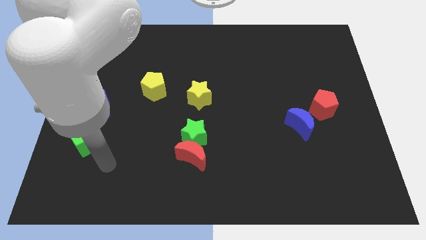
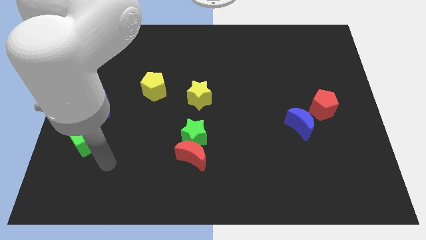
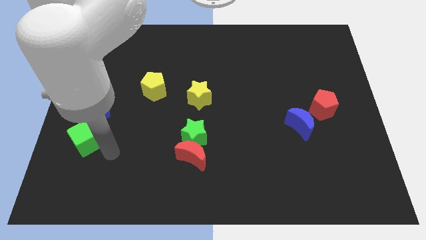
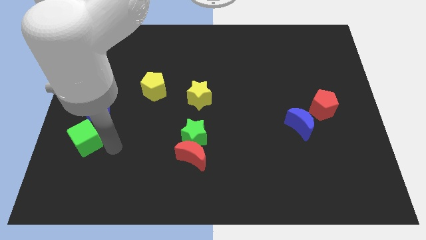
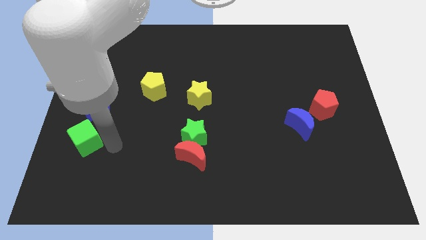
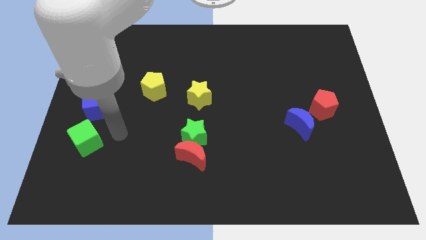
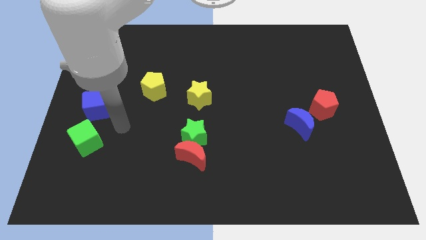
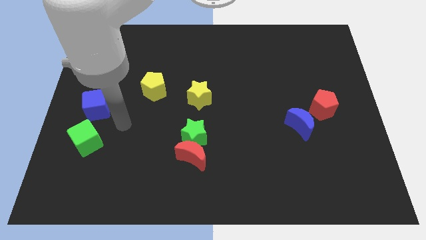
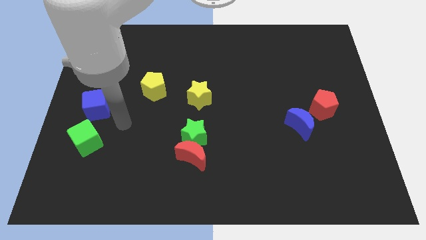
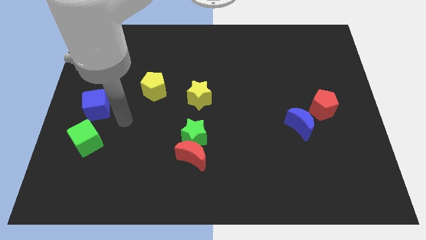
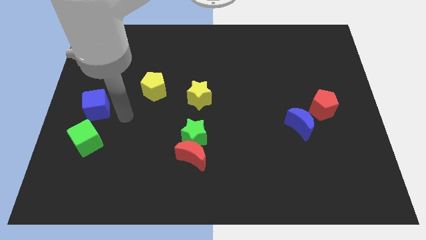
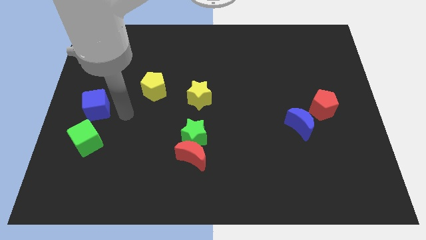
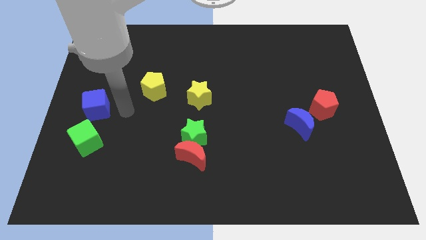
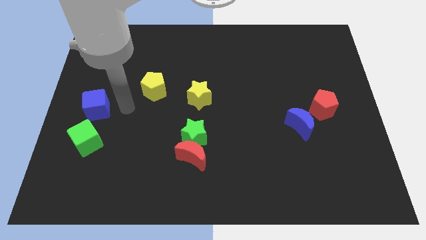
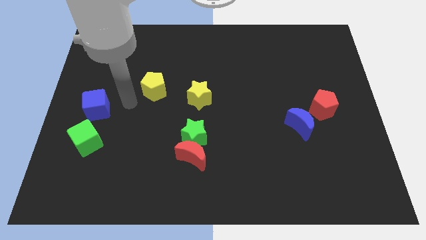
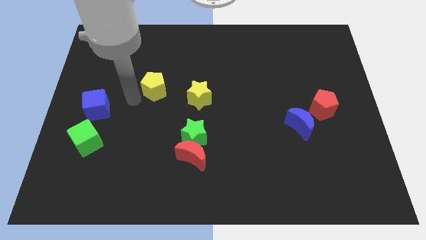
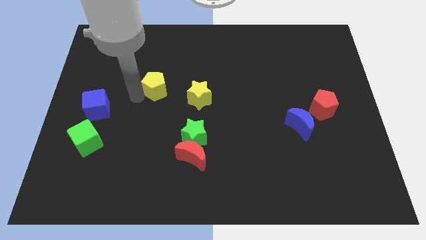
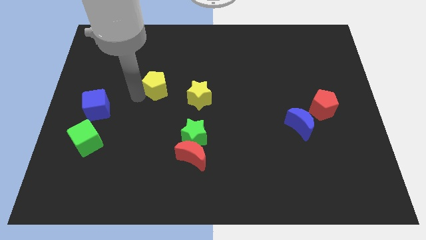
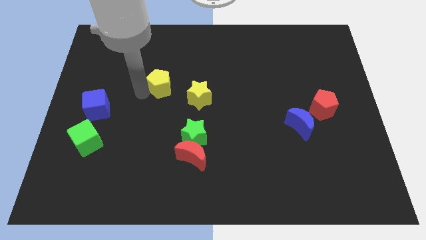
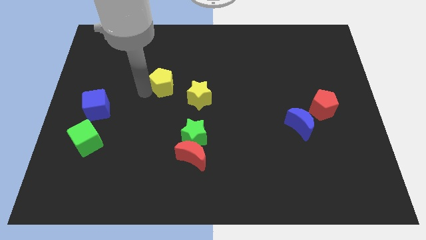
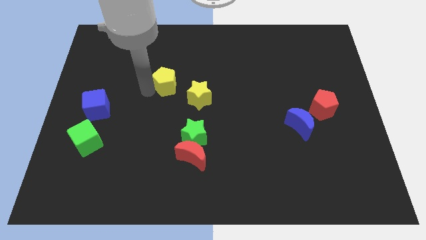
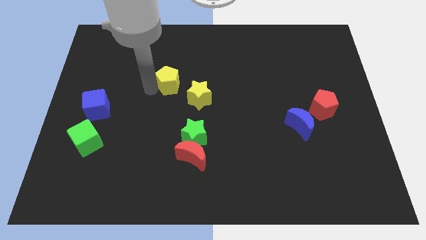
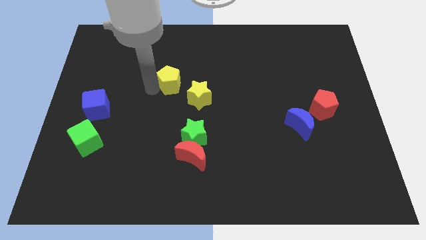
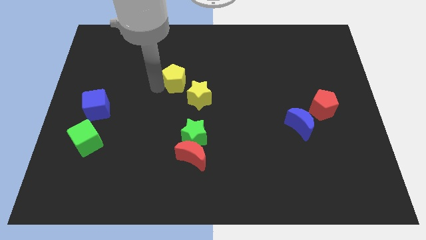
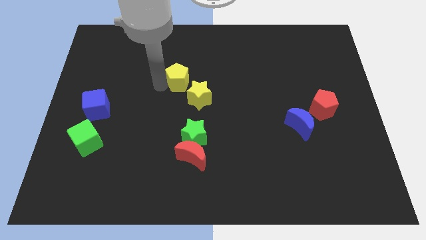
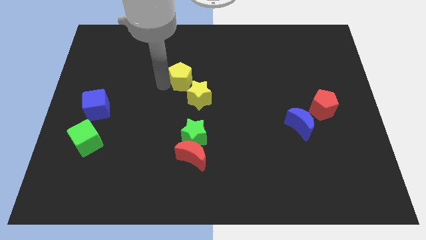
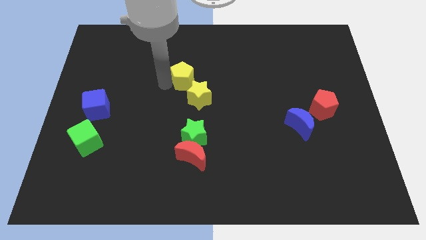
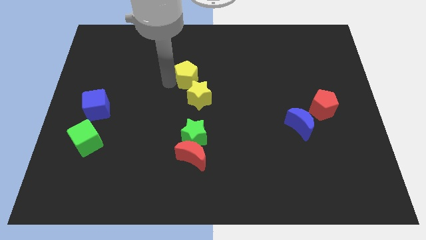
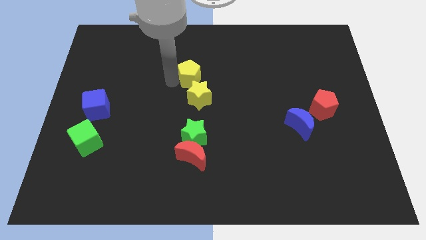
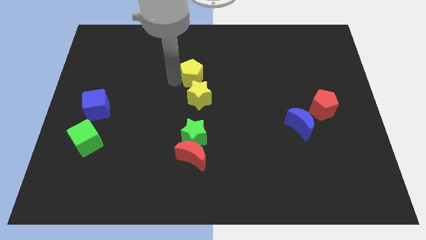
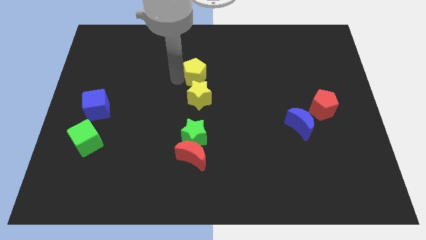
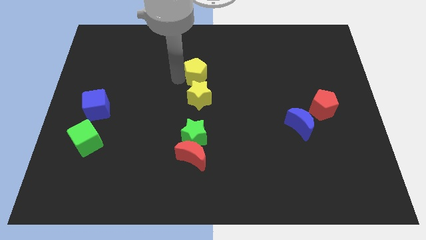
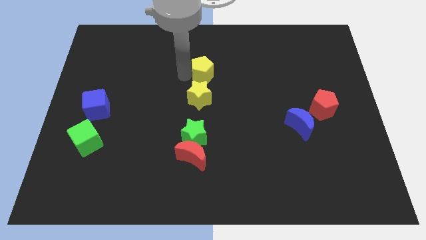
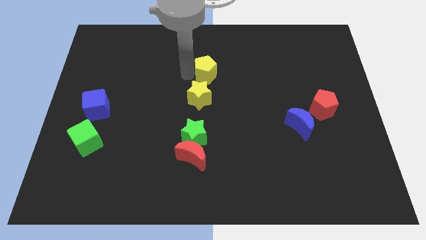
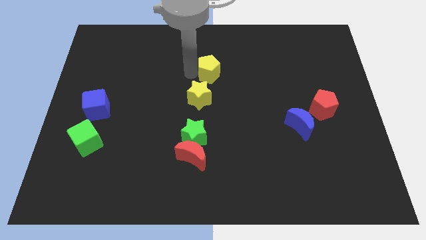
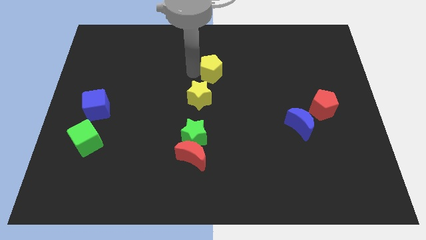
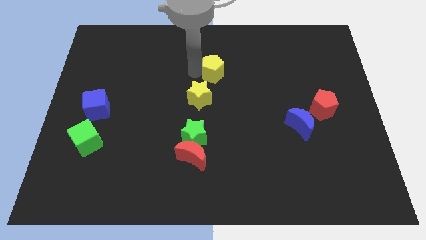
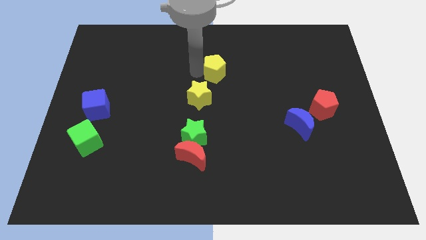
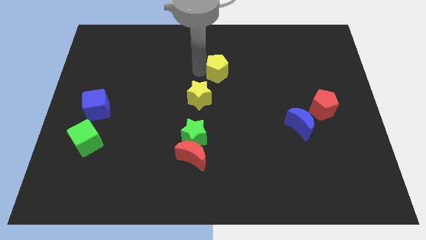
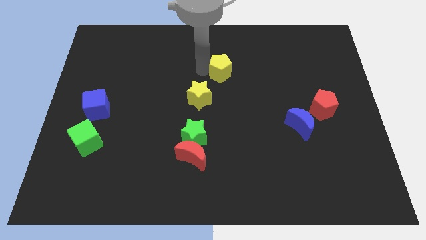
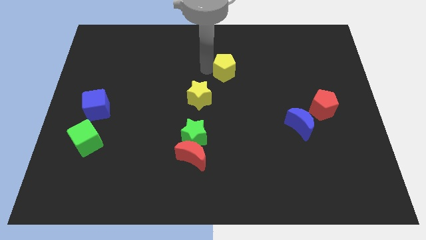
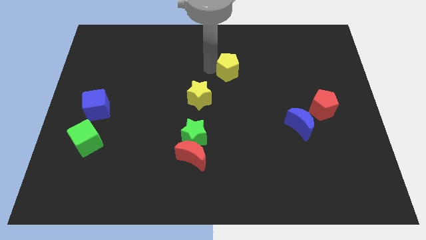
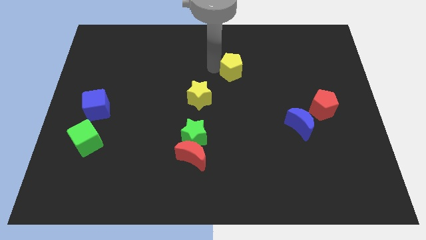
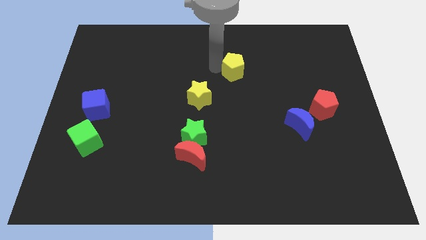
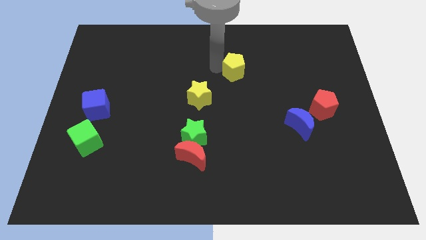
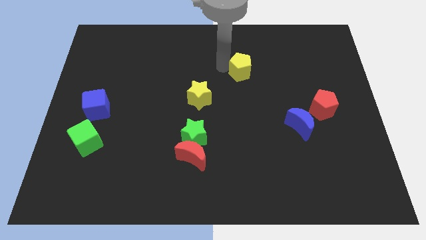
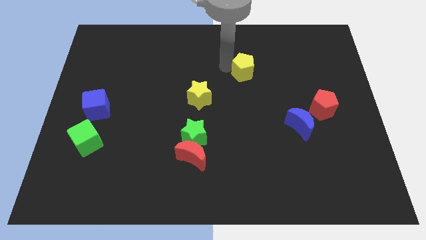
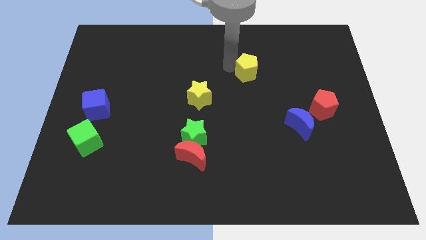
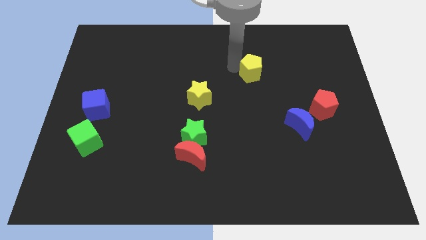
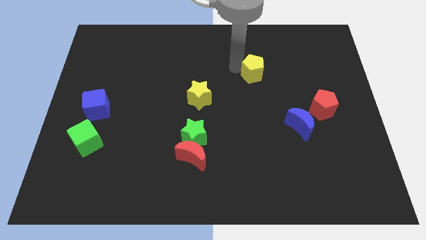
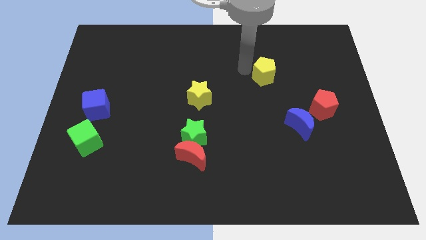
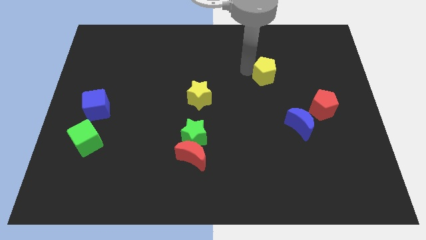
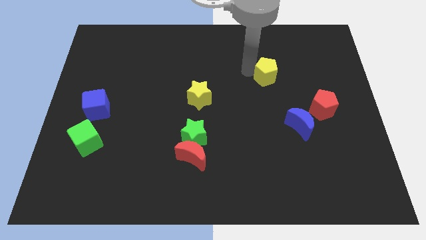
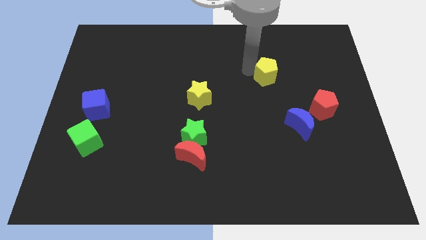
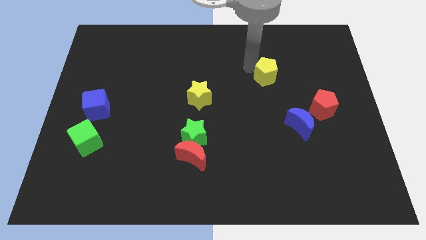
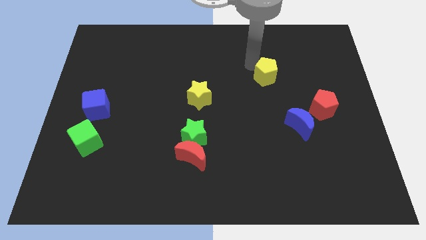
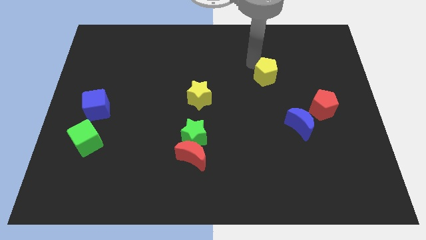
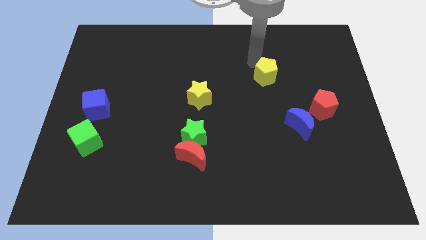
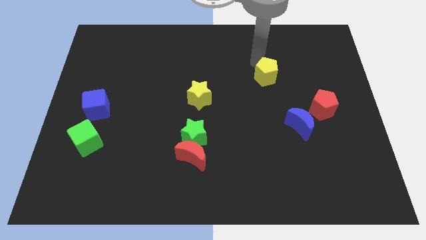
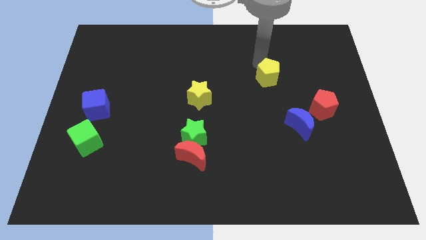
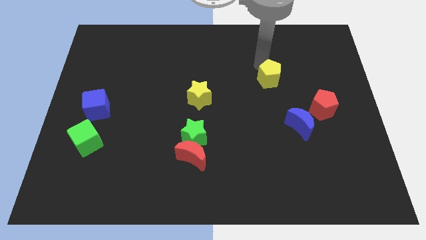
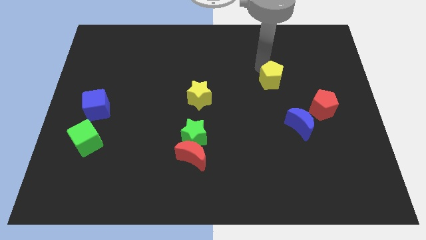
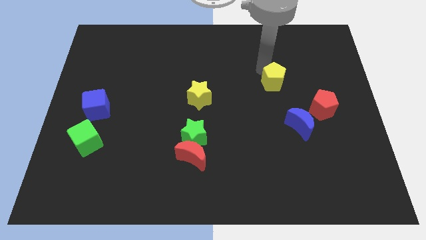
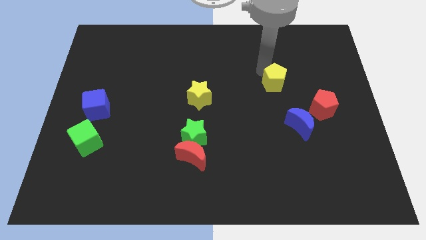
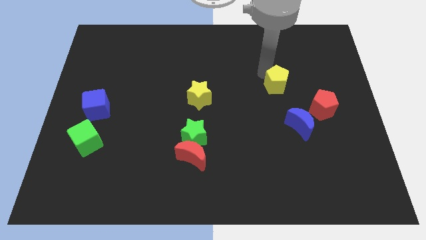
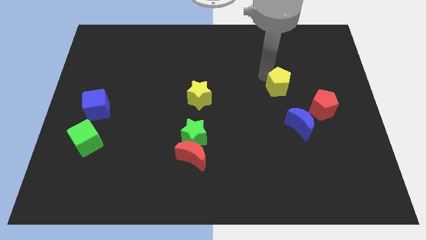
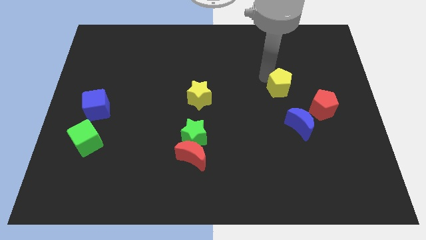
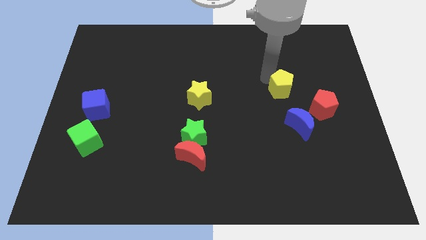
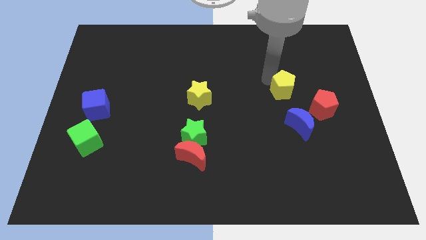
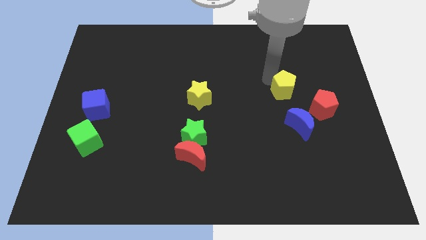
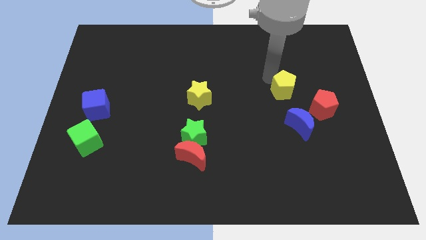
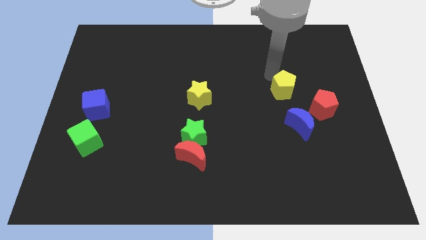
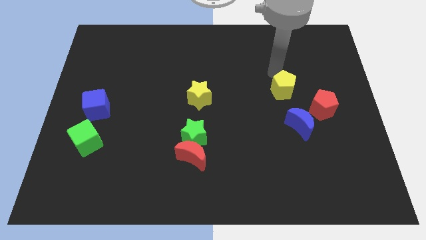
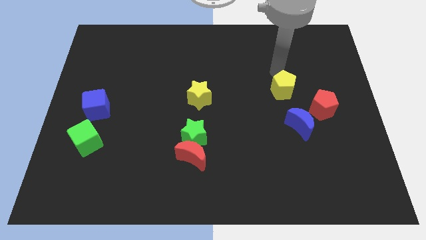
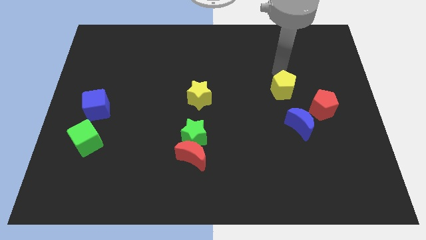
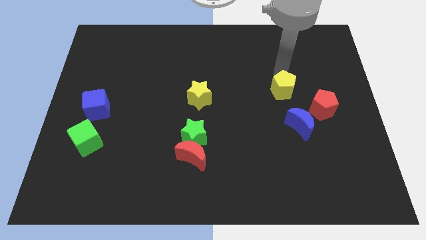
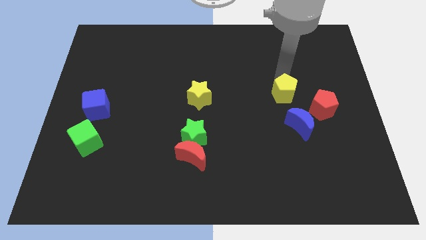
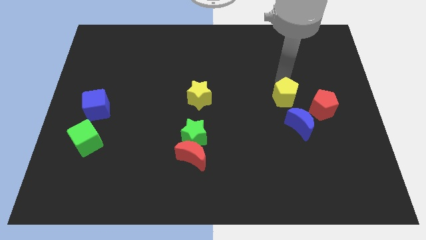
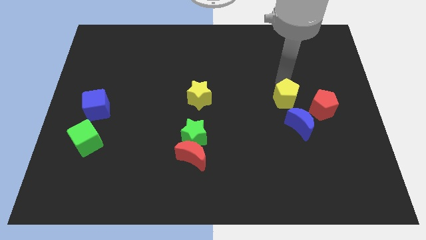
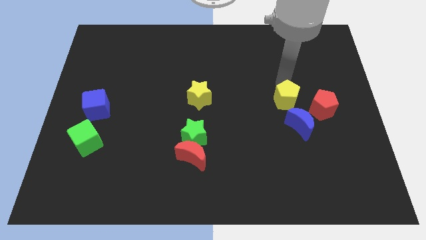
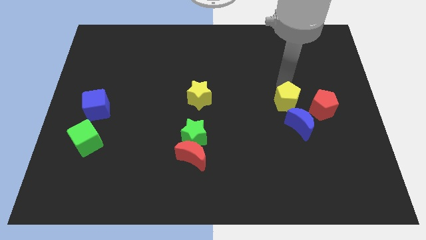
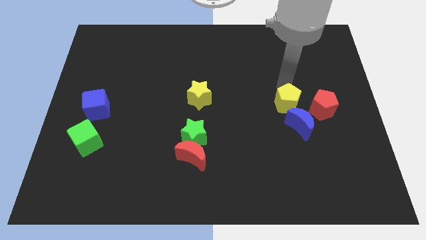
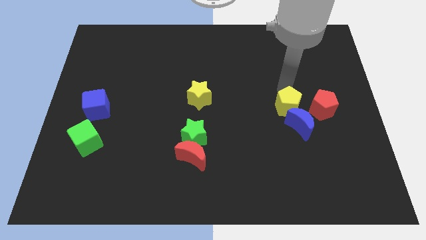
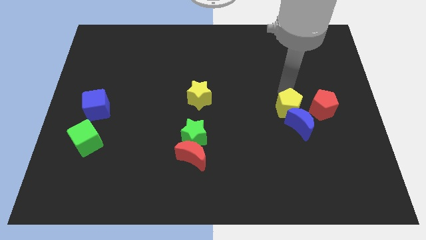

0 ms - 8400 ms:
slide the yellow pentagon to the blue moon
